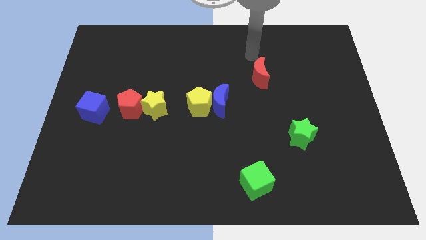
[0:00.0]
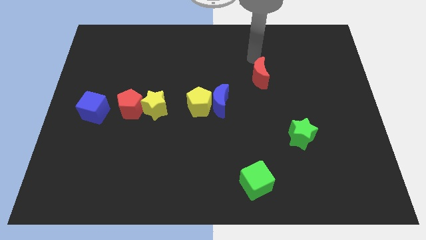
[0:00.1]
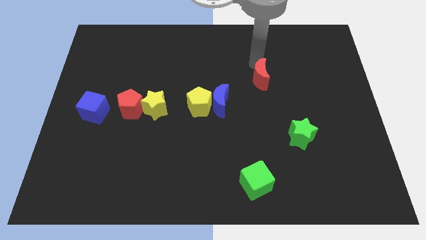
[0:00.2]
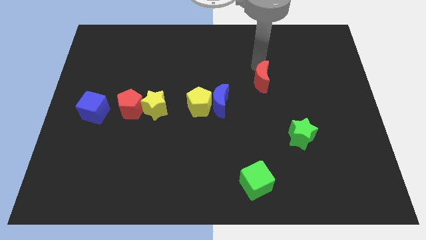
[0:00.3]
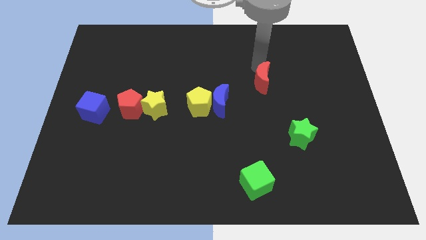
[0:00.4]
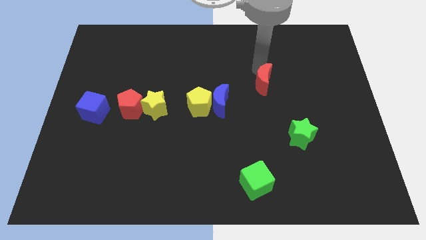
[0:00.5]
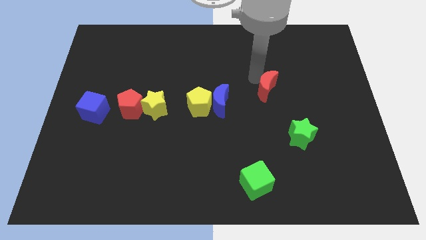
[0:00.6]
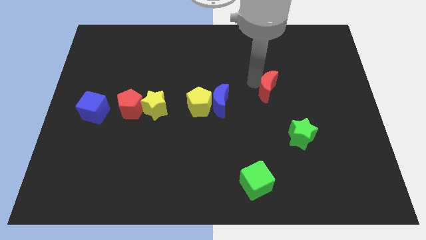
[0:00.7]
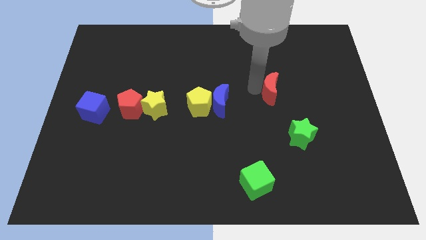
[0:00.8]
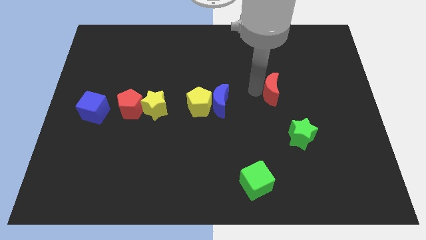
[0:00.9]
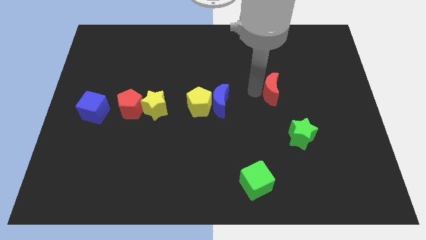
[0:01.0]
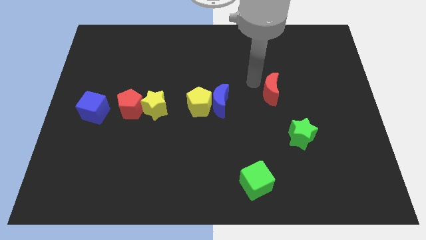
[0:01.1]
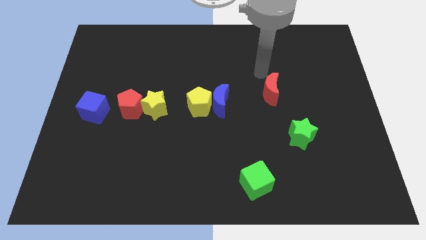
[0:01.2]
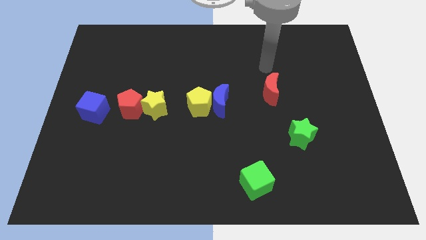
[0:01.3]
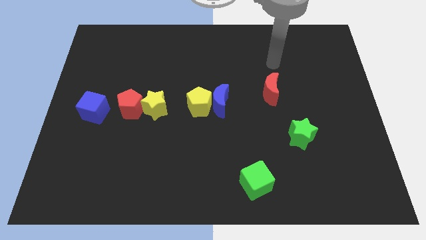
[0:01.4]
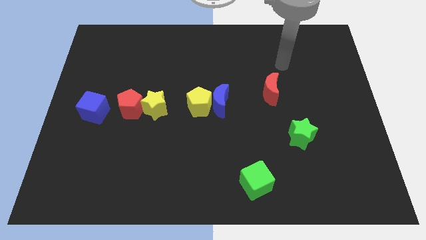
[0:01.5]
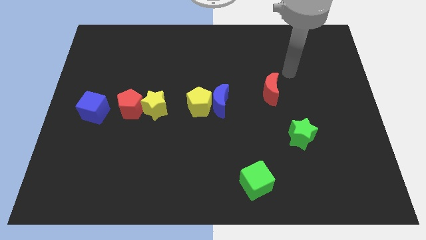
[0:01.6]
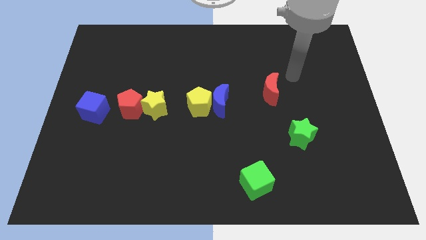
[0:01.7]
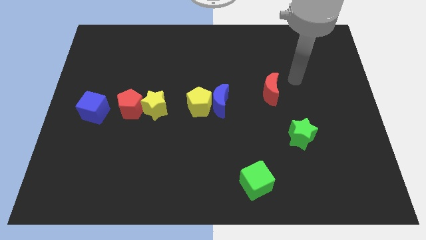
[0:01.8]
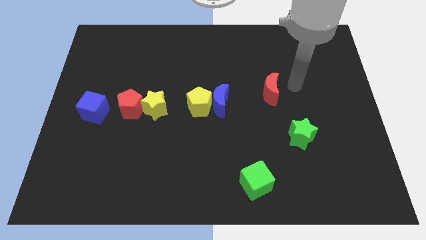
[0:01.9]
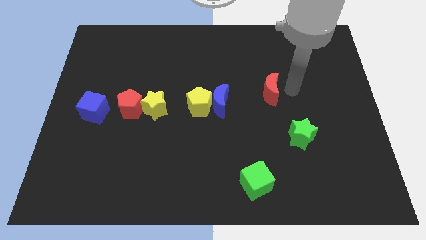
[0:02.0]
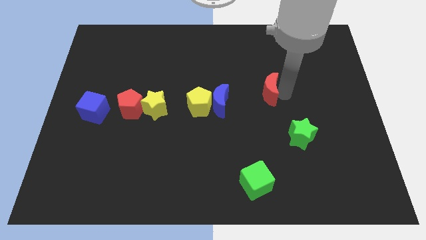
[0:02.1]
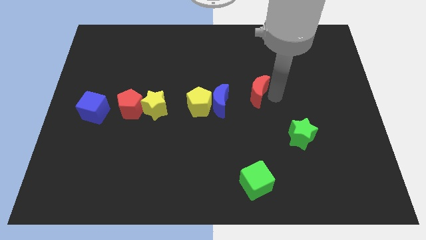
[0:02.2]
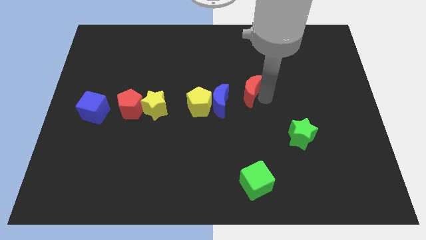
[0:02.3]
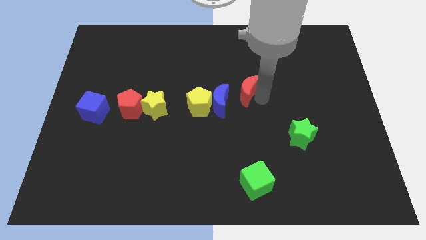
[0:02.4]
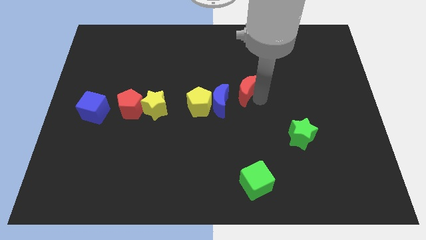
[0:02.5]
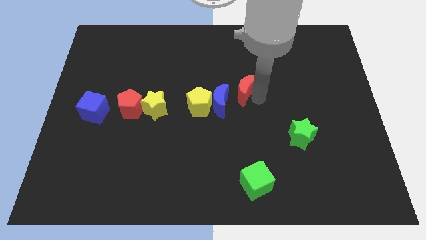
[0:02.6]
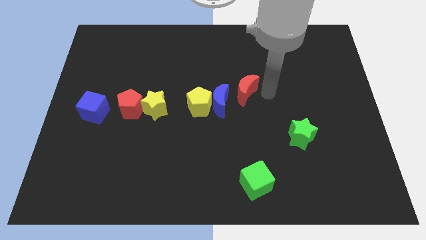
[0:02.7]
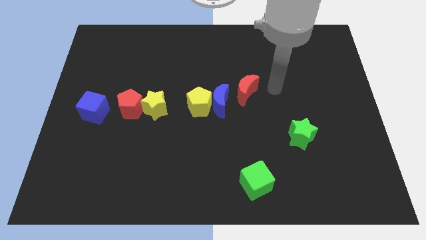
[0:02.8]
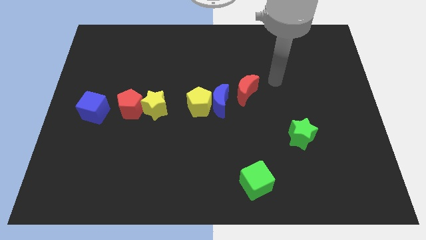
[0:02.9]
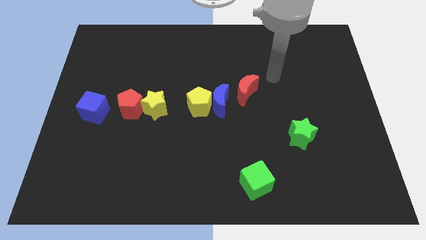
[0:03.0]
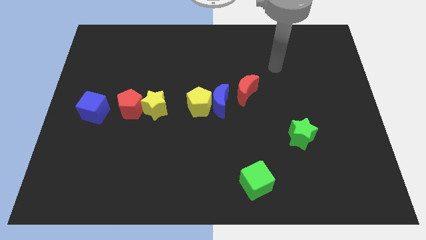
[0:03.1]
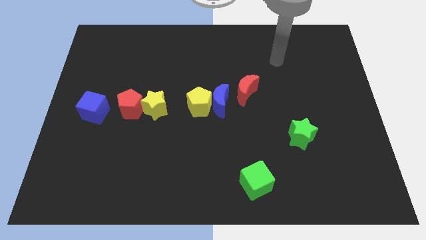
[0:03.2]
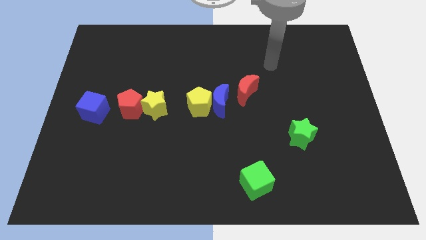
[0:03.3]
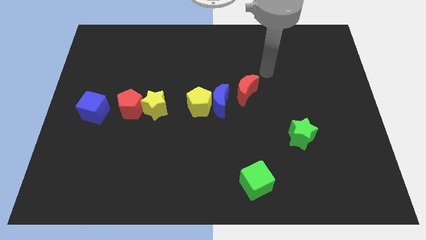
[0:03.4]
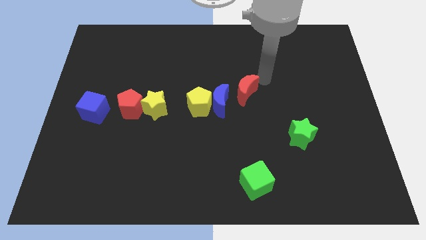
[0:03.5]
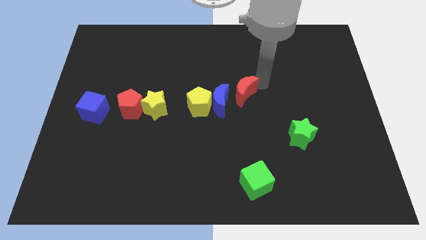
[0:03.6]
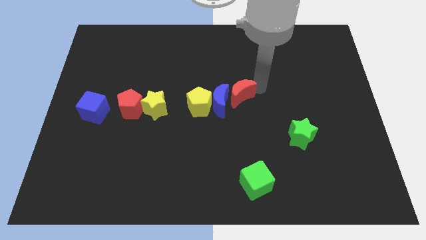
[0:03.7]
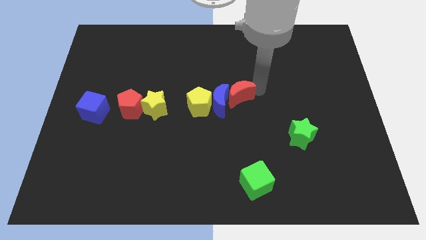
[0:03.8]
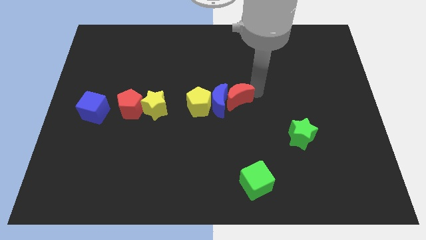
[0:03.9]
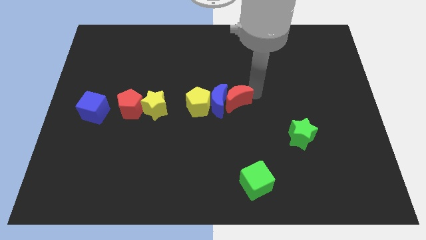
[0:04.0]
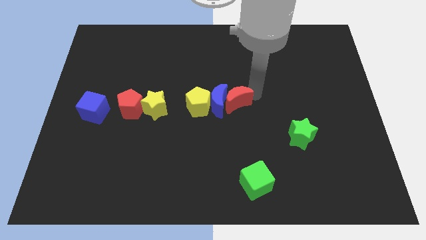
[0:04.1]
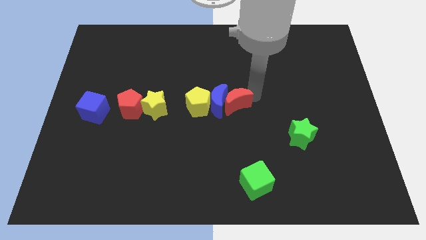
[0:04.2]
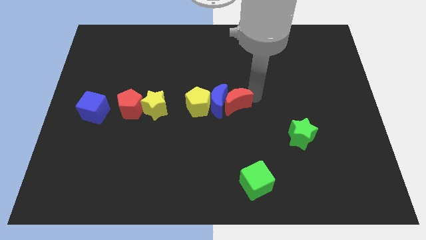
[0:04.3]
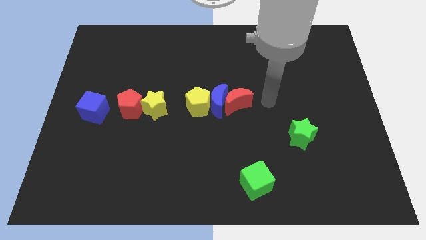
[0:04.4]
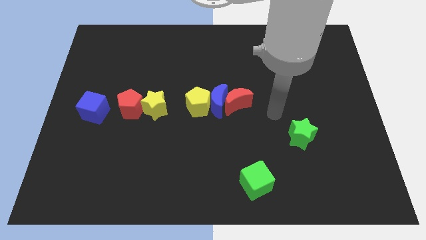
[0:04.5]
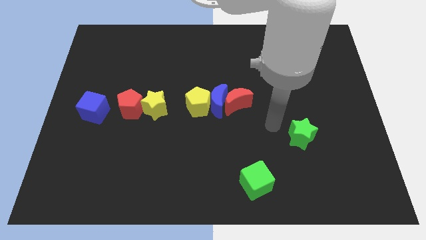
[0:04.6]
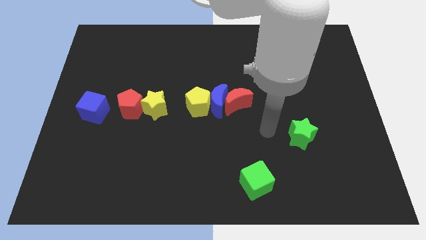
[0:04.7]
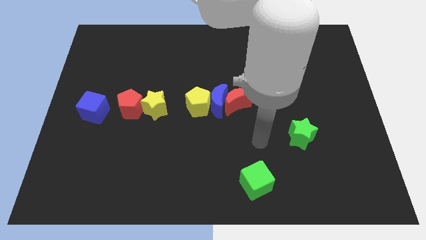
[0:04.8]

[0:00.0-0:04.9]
put the red moon into the blue crescent

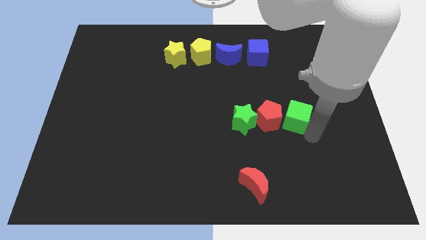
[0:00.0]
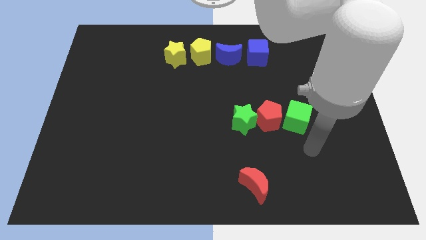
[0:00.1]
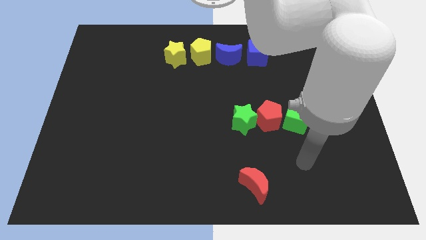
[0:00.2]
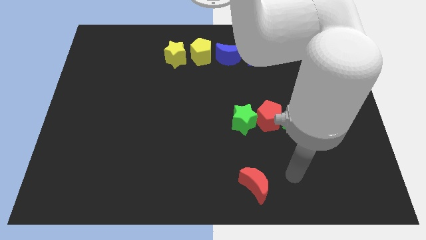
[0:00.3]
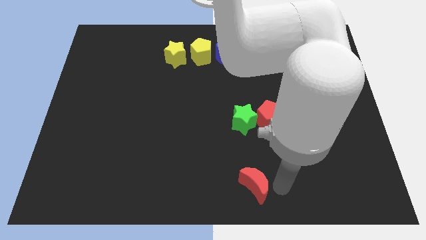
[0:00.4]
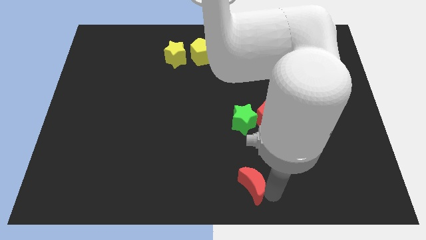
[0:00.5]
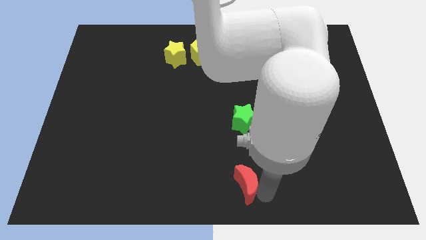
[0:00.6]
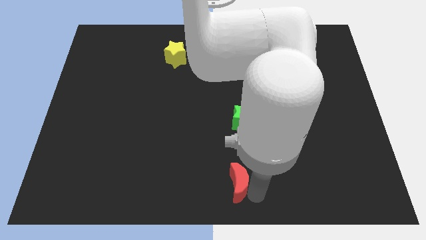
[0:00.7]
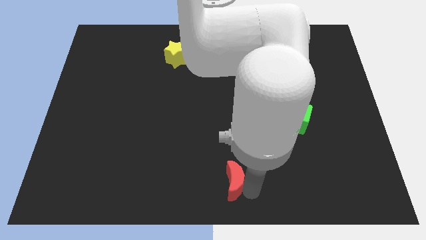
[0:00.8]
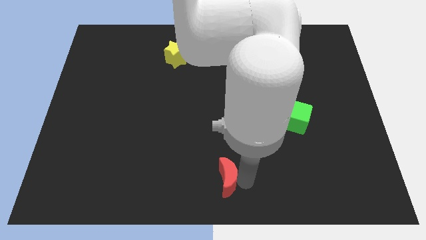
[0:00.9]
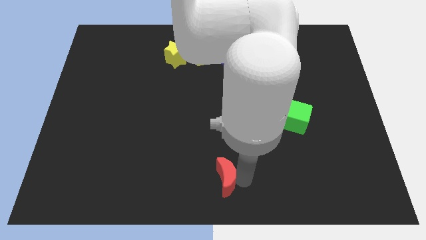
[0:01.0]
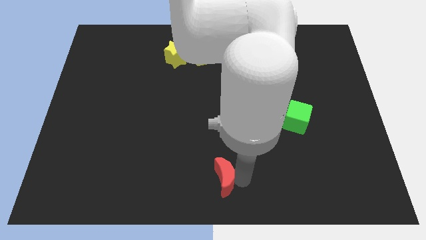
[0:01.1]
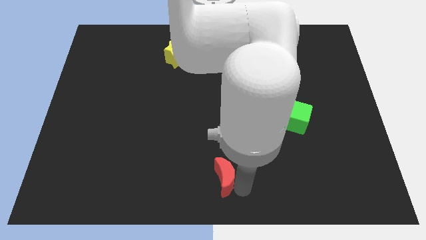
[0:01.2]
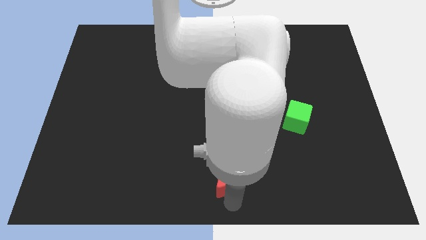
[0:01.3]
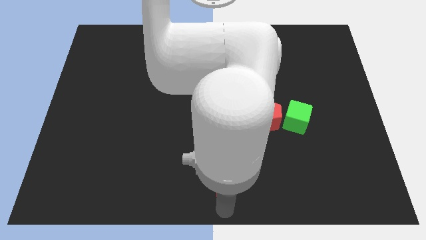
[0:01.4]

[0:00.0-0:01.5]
move the red moon towards the left

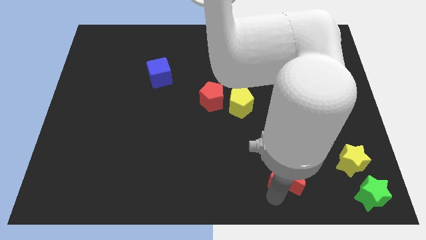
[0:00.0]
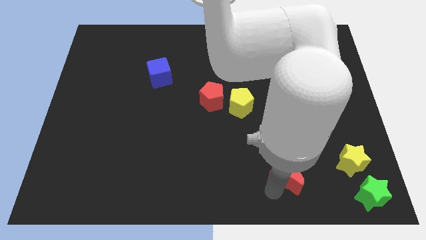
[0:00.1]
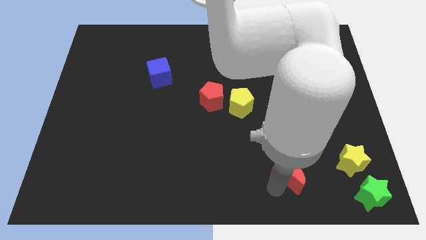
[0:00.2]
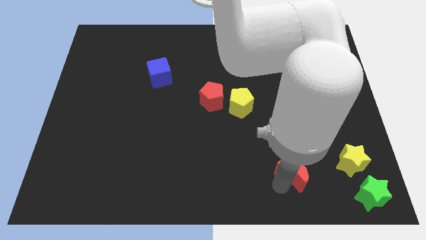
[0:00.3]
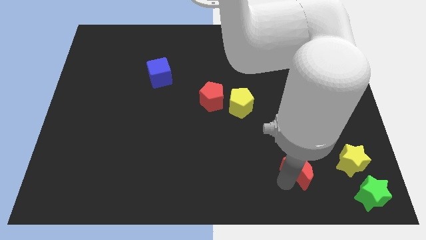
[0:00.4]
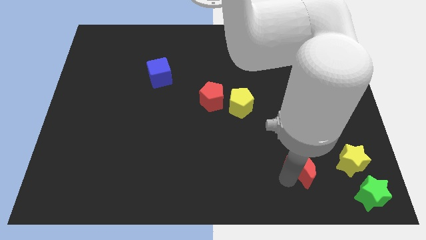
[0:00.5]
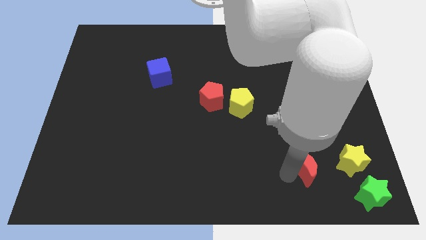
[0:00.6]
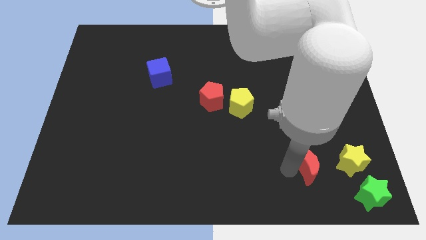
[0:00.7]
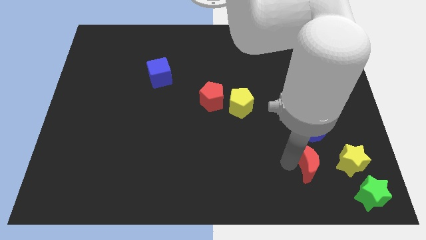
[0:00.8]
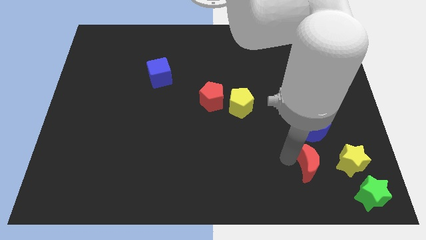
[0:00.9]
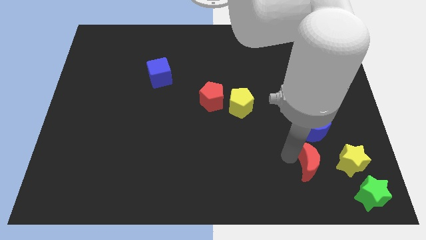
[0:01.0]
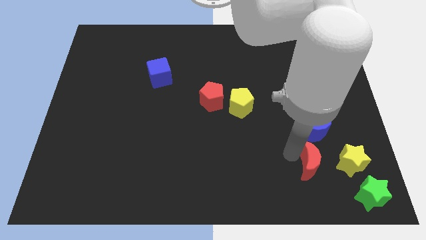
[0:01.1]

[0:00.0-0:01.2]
move red moon to the left of the yellow star

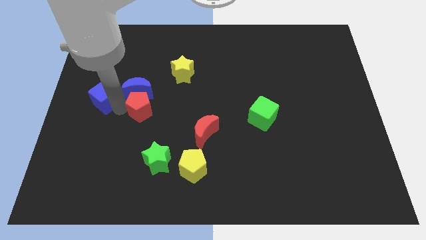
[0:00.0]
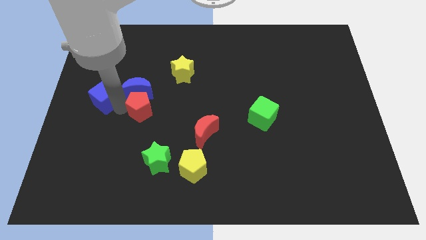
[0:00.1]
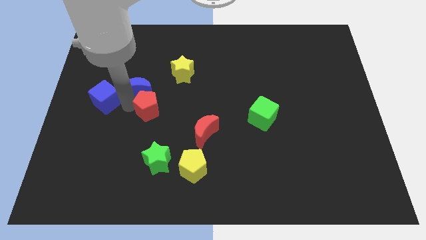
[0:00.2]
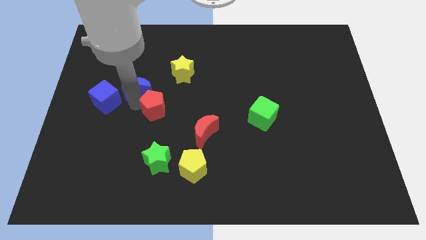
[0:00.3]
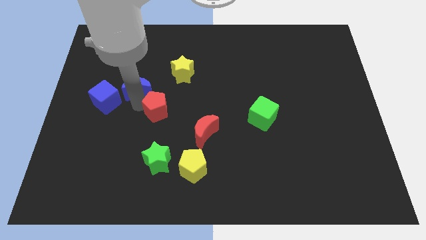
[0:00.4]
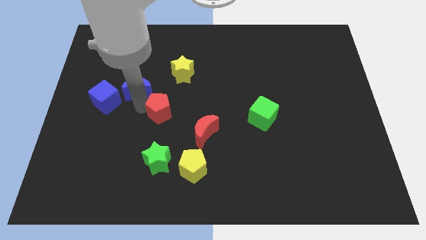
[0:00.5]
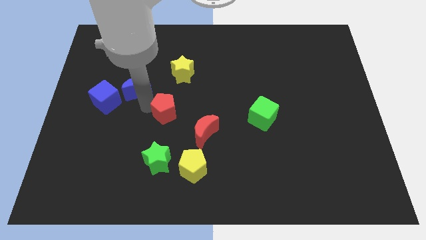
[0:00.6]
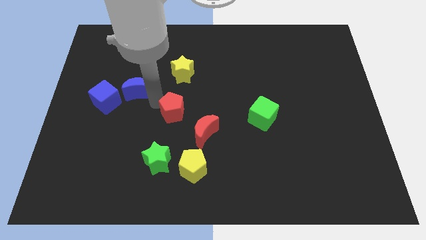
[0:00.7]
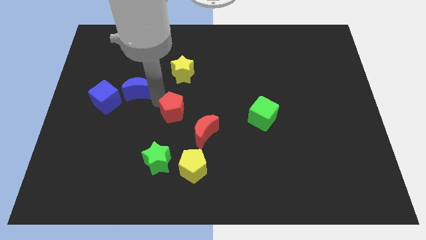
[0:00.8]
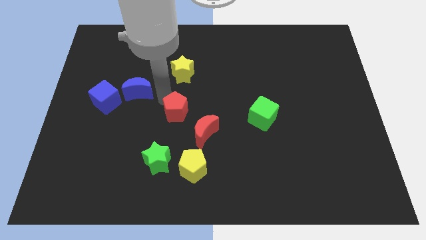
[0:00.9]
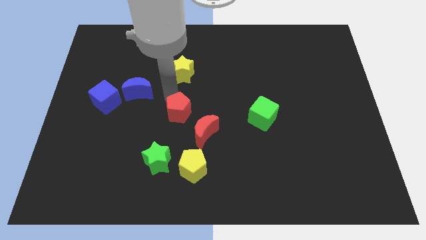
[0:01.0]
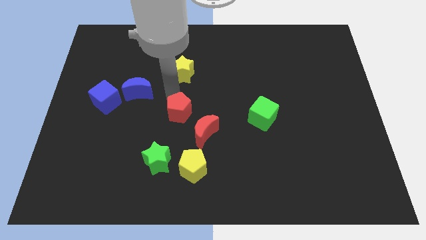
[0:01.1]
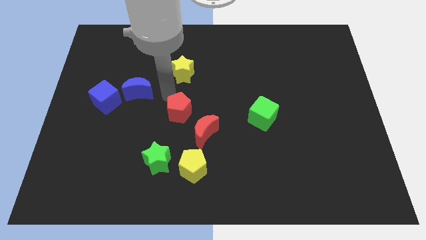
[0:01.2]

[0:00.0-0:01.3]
place the red pentagon to the center
